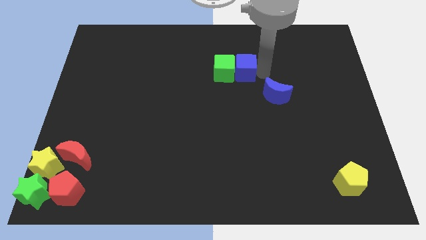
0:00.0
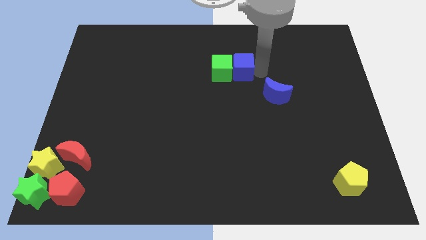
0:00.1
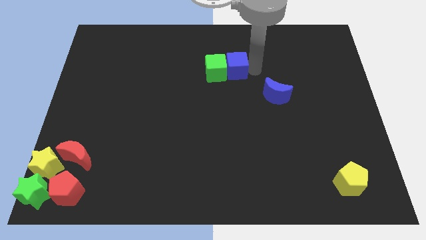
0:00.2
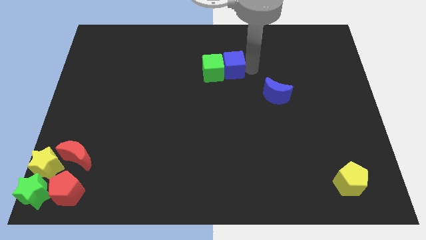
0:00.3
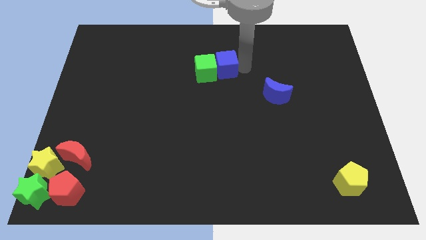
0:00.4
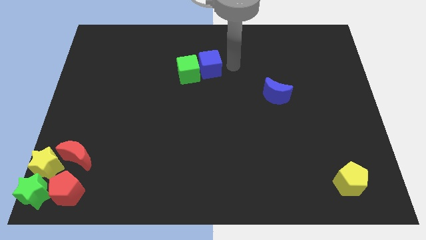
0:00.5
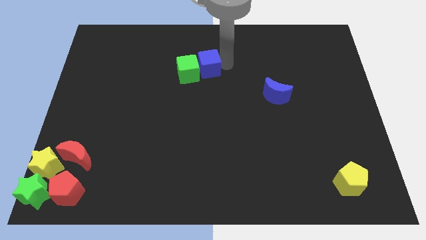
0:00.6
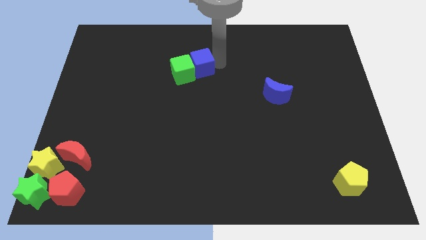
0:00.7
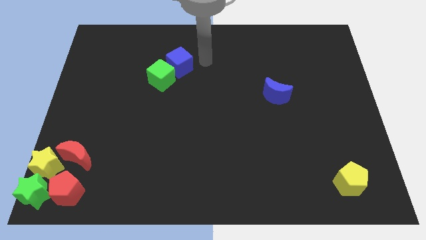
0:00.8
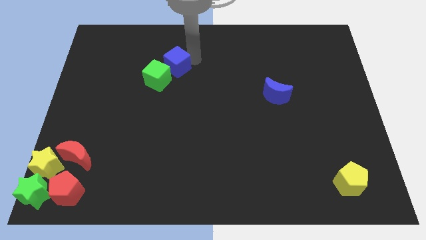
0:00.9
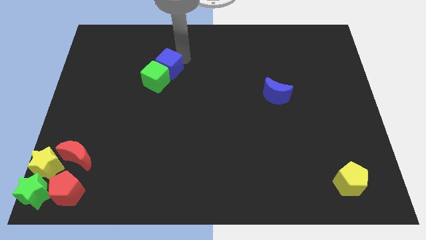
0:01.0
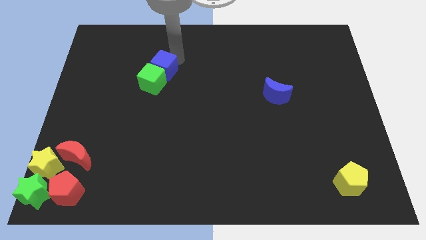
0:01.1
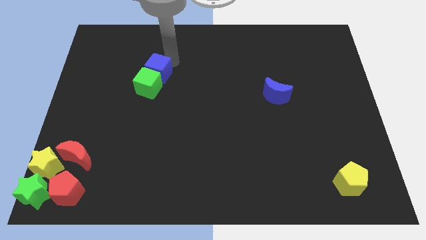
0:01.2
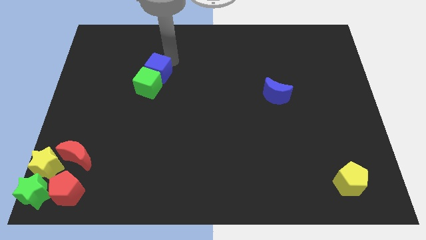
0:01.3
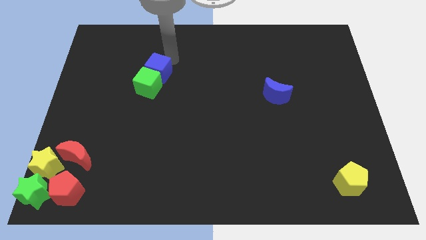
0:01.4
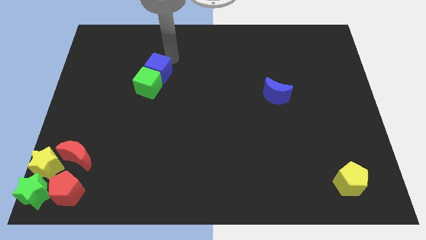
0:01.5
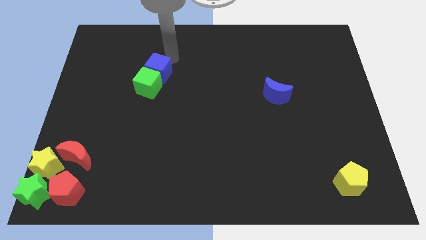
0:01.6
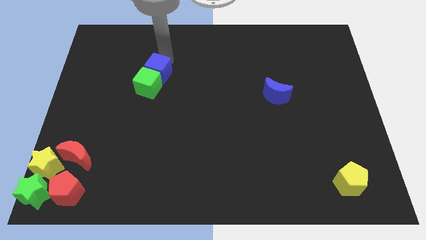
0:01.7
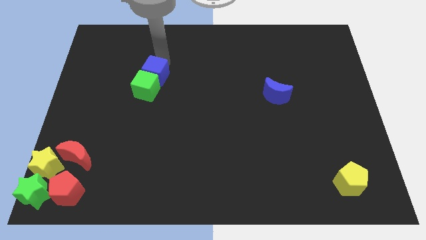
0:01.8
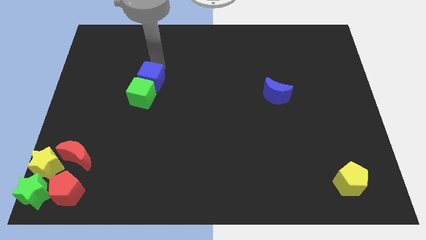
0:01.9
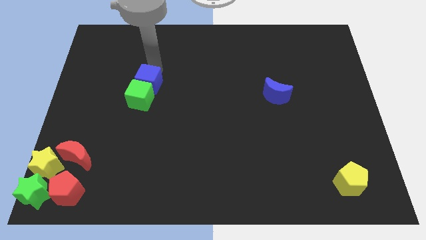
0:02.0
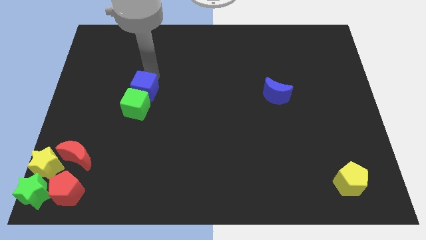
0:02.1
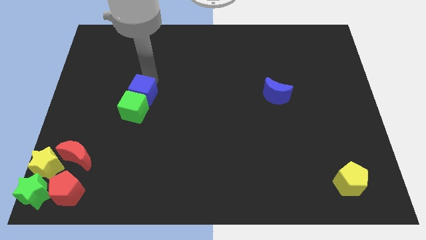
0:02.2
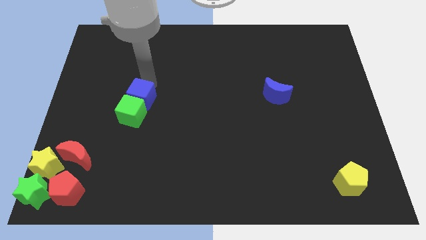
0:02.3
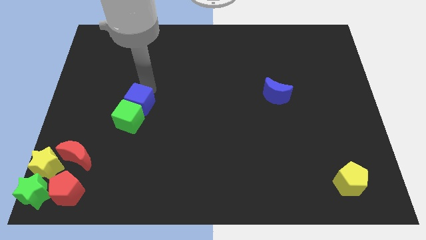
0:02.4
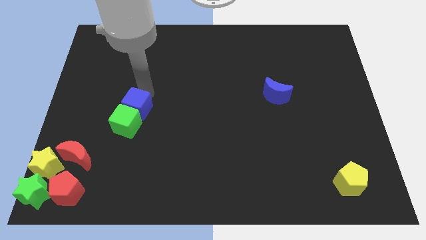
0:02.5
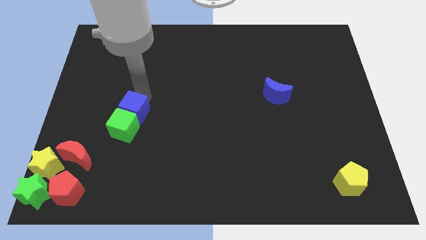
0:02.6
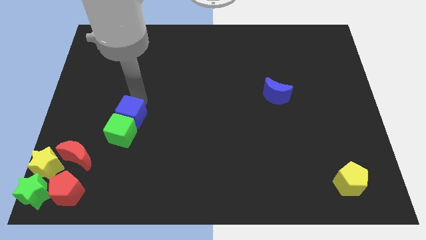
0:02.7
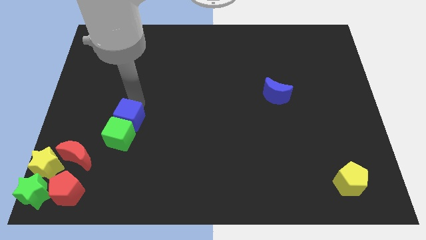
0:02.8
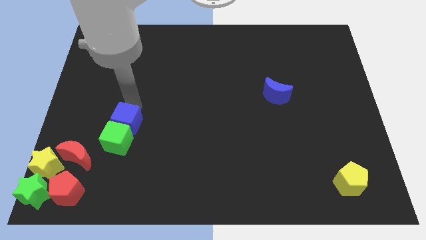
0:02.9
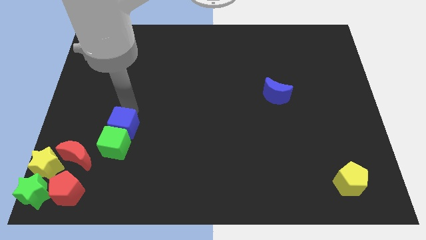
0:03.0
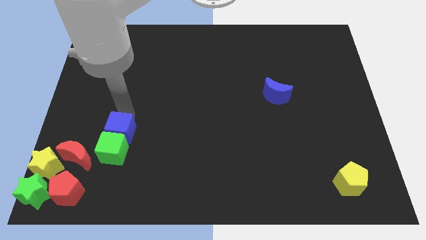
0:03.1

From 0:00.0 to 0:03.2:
drag green and the blue cube towards the bottom left

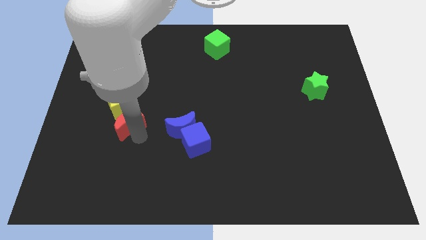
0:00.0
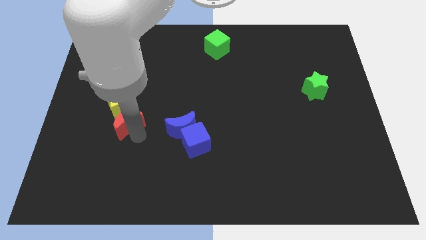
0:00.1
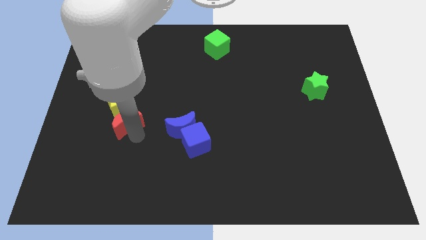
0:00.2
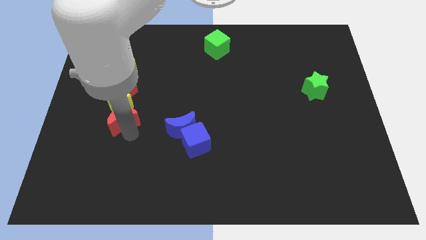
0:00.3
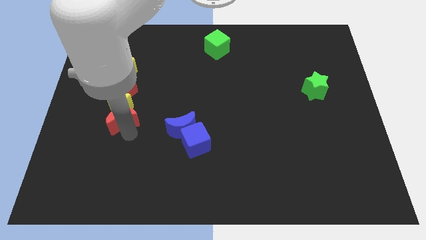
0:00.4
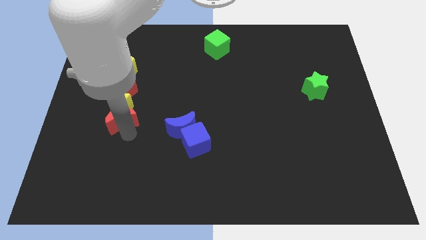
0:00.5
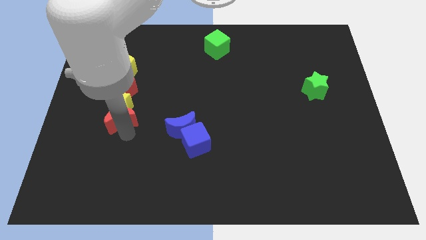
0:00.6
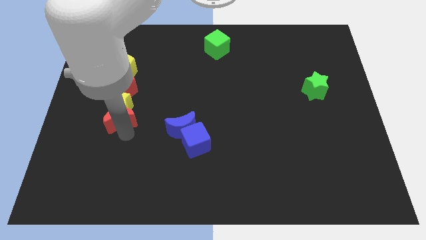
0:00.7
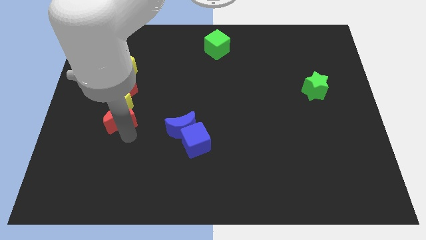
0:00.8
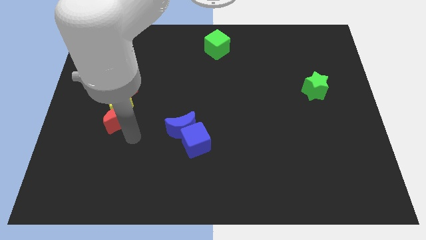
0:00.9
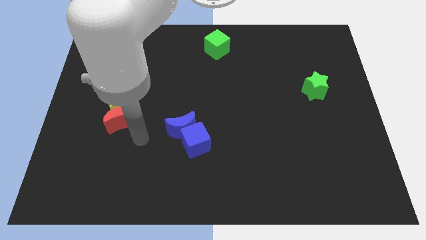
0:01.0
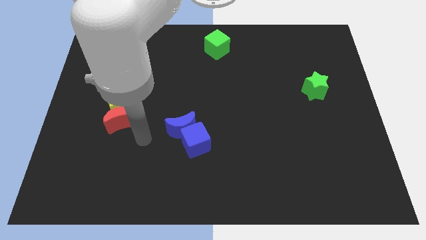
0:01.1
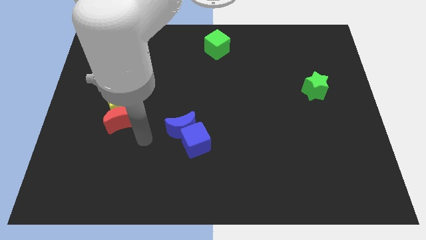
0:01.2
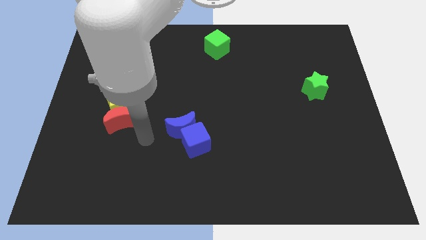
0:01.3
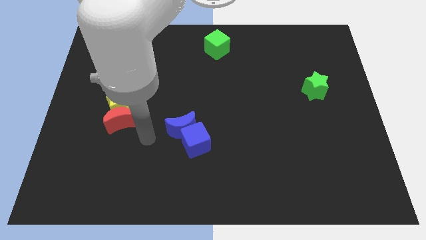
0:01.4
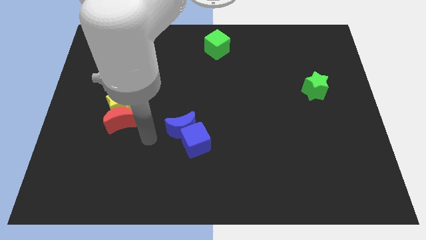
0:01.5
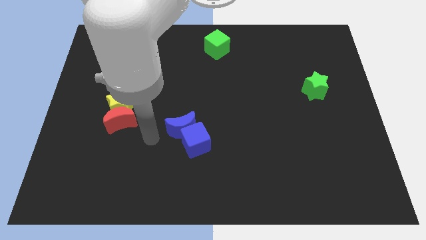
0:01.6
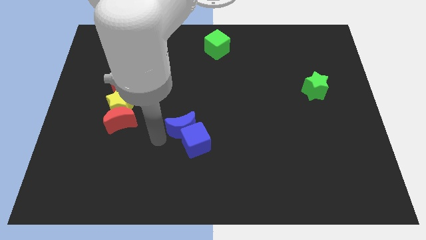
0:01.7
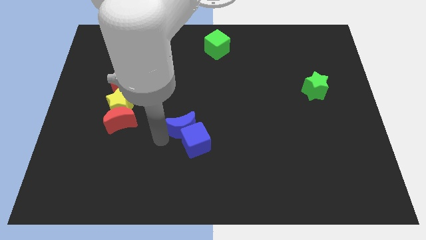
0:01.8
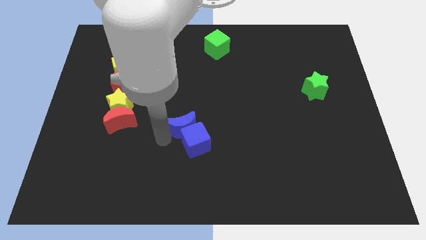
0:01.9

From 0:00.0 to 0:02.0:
move the red moon into the yellow star

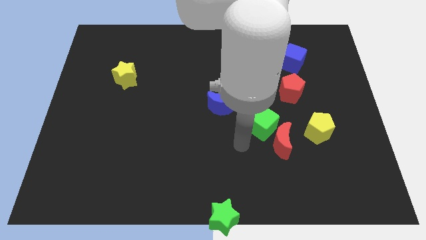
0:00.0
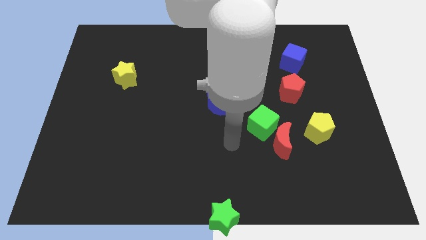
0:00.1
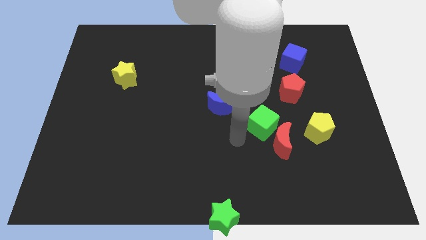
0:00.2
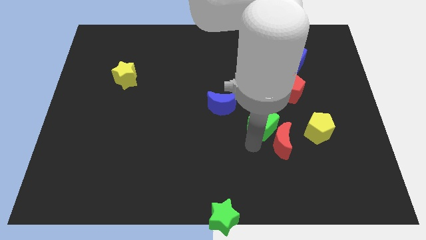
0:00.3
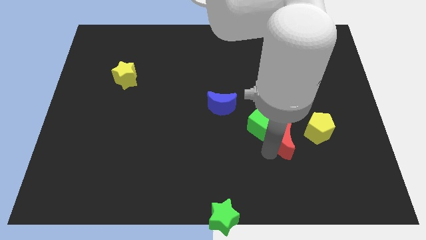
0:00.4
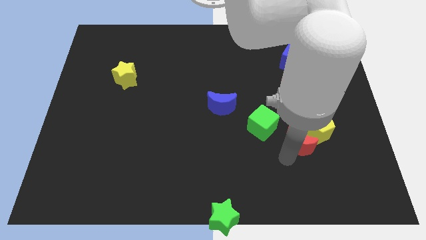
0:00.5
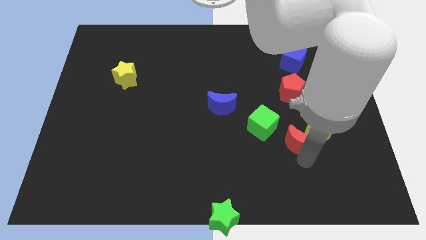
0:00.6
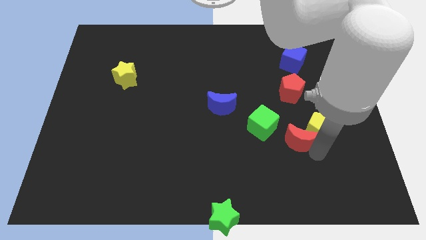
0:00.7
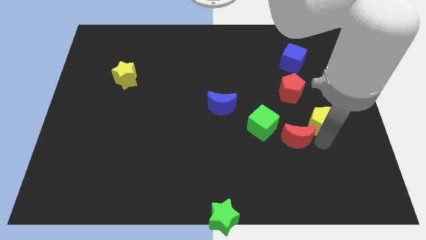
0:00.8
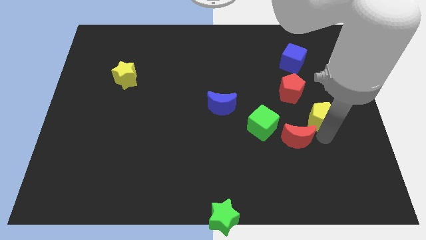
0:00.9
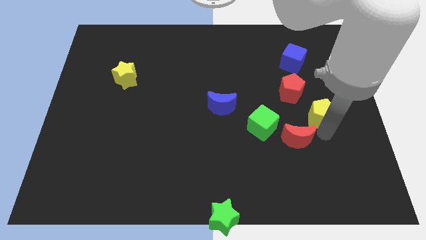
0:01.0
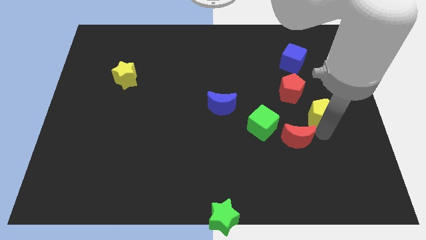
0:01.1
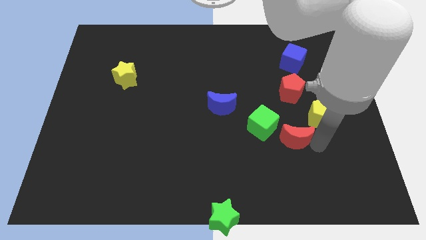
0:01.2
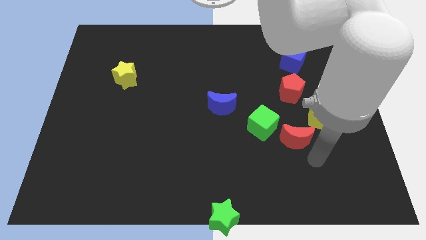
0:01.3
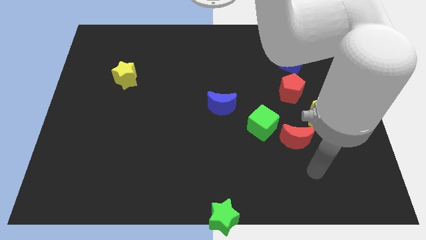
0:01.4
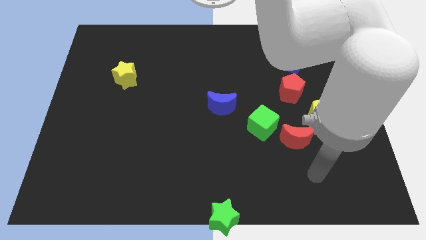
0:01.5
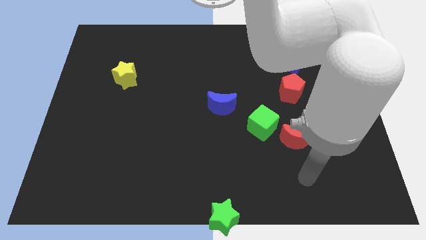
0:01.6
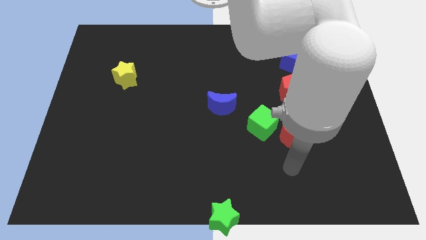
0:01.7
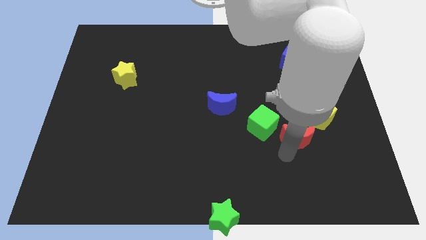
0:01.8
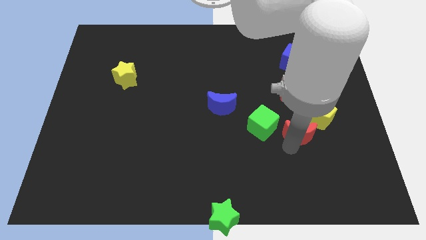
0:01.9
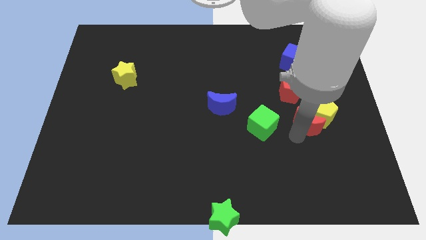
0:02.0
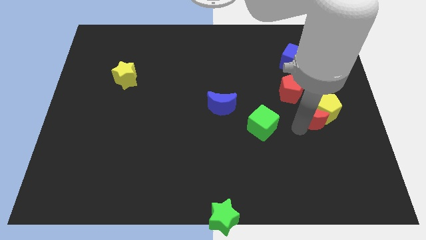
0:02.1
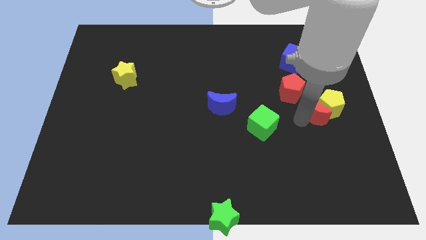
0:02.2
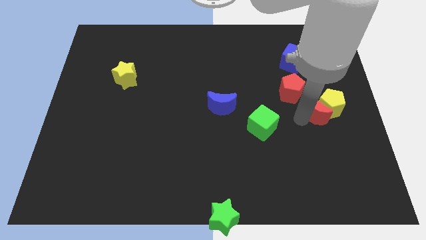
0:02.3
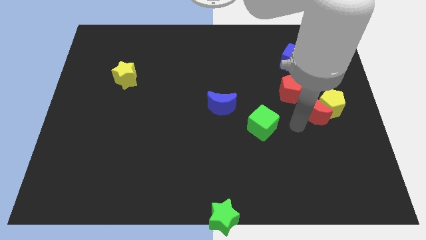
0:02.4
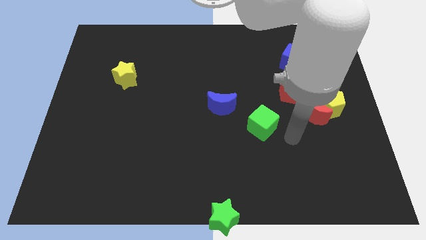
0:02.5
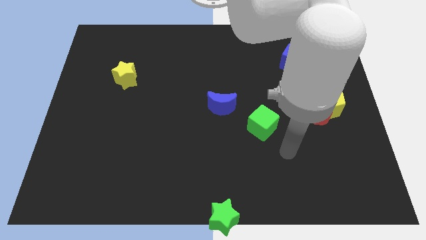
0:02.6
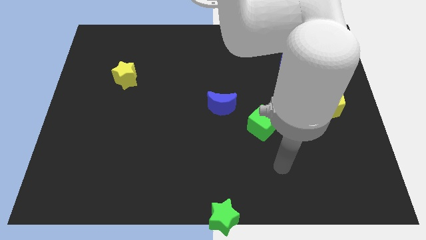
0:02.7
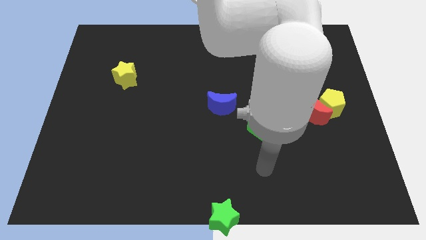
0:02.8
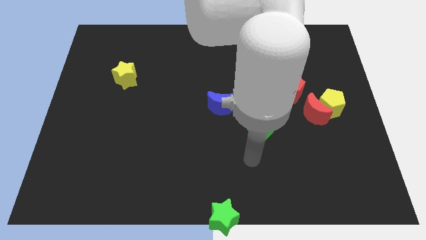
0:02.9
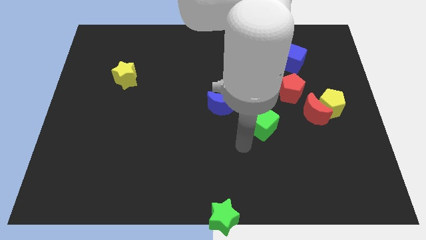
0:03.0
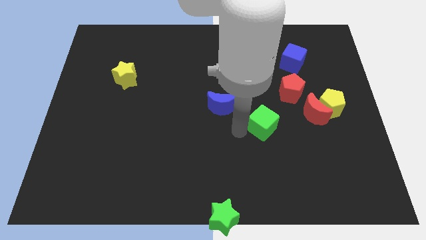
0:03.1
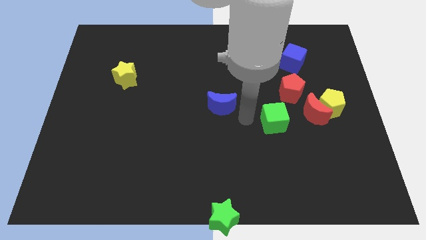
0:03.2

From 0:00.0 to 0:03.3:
place red moon to the bottom right of red pentagon

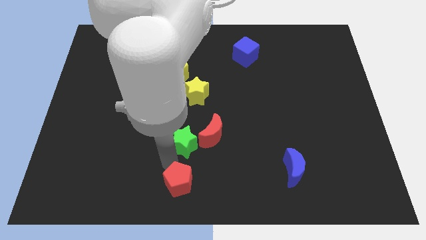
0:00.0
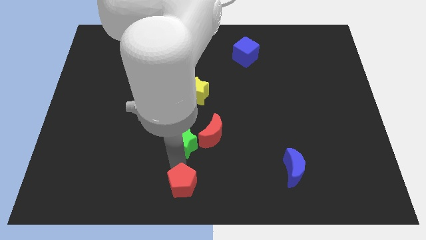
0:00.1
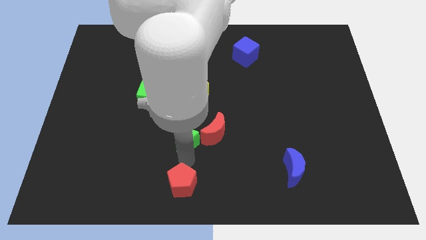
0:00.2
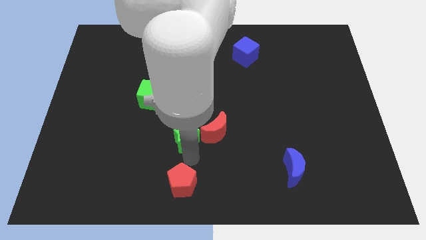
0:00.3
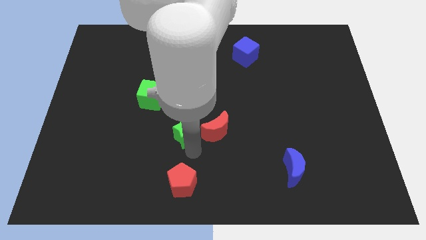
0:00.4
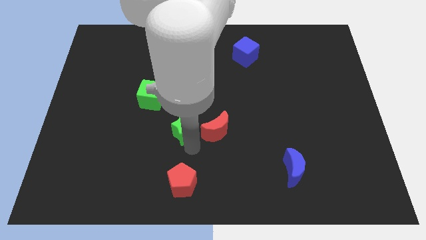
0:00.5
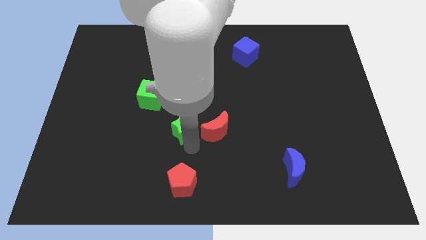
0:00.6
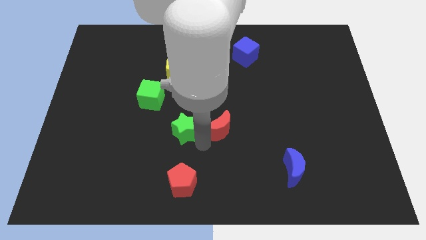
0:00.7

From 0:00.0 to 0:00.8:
slightly move the green star upwards
